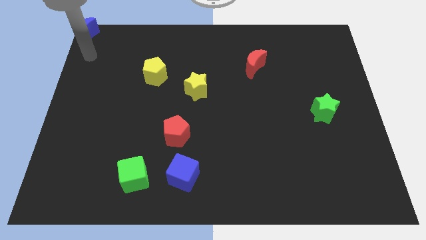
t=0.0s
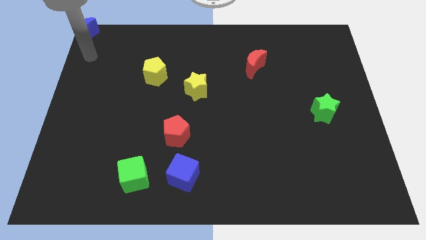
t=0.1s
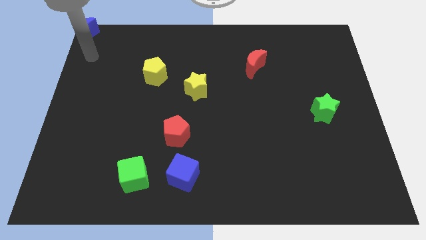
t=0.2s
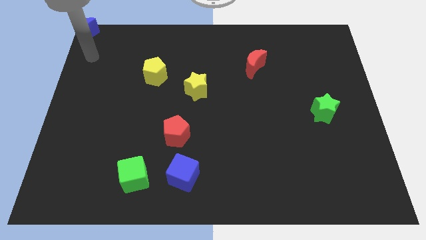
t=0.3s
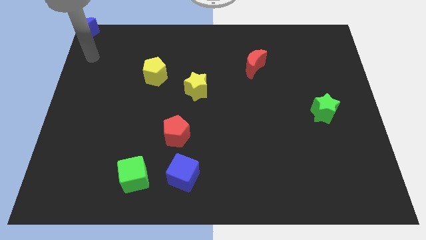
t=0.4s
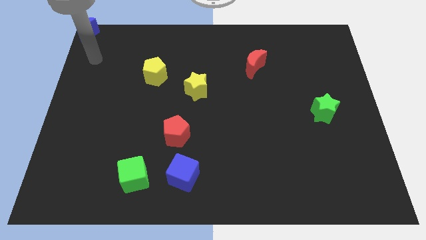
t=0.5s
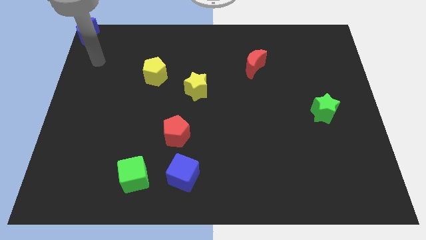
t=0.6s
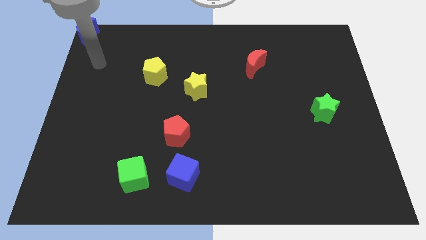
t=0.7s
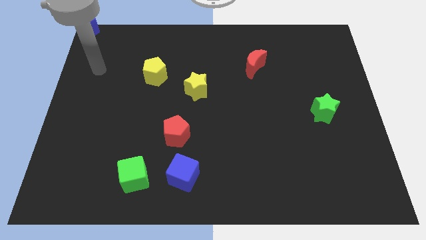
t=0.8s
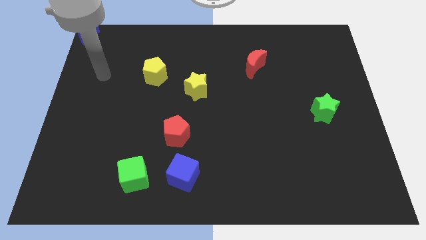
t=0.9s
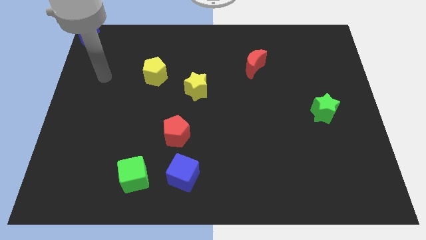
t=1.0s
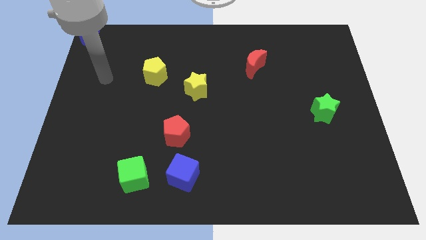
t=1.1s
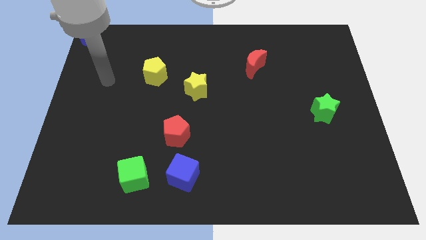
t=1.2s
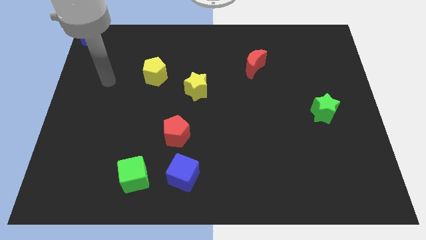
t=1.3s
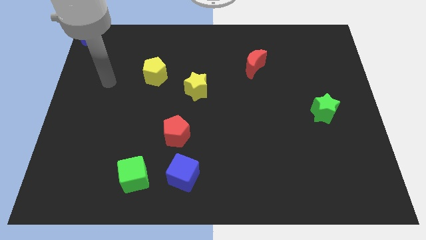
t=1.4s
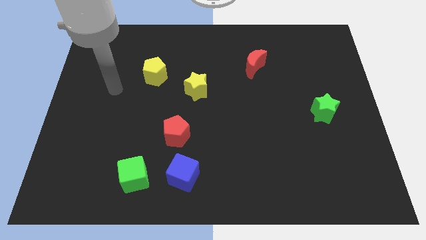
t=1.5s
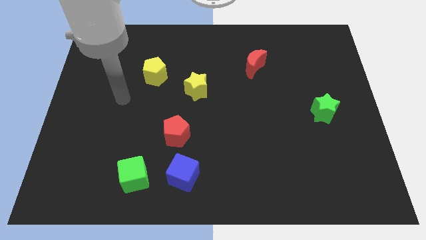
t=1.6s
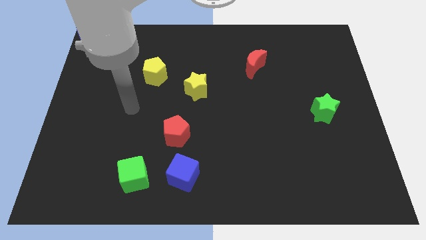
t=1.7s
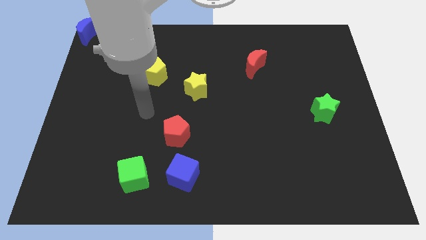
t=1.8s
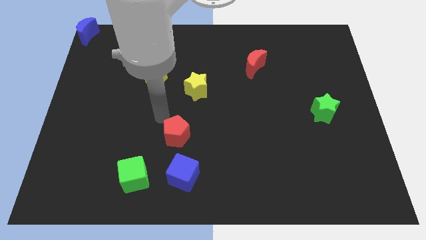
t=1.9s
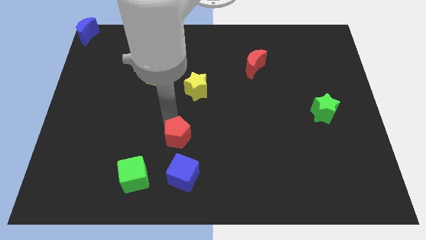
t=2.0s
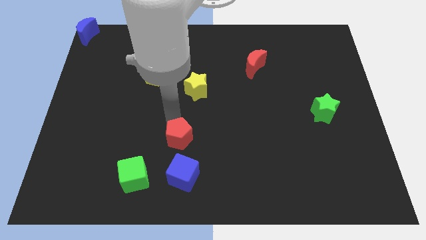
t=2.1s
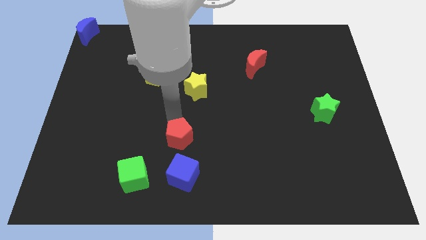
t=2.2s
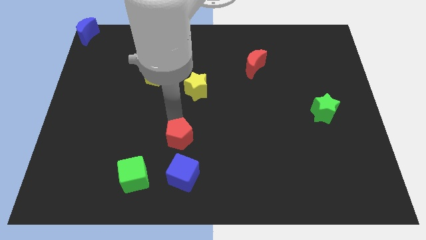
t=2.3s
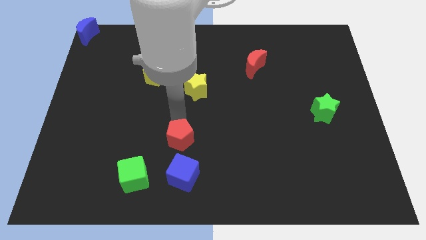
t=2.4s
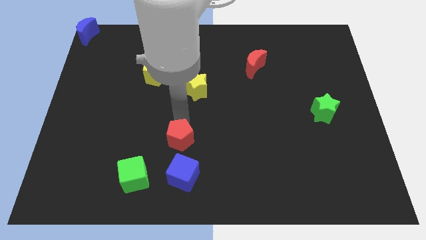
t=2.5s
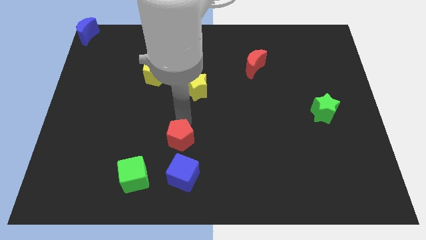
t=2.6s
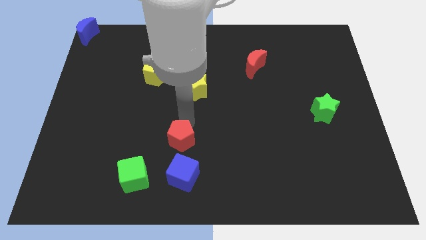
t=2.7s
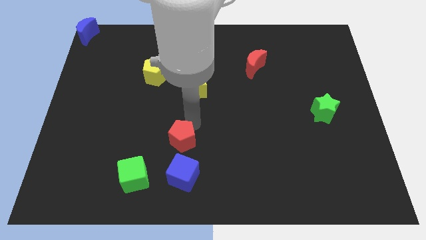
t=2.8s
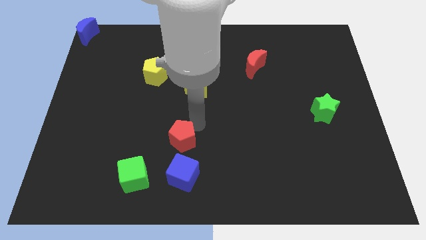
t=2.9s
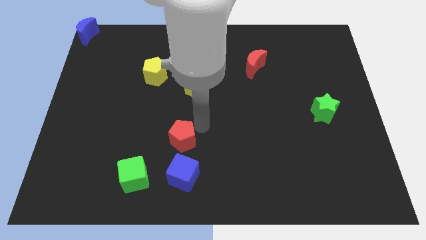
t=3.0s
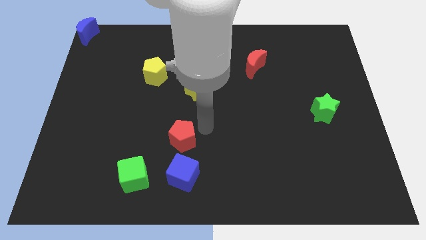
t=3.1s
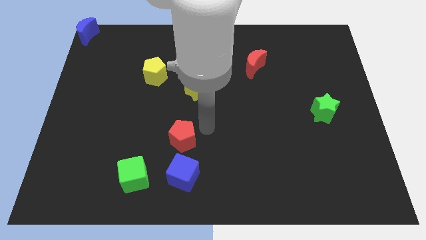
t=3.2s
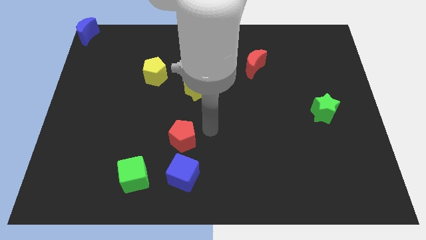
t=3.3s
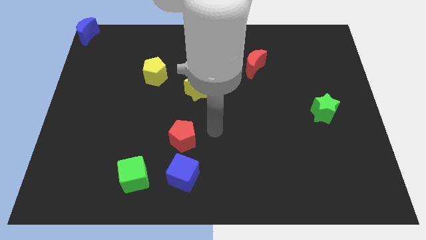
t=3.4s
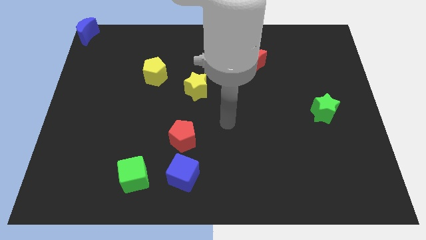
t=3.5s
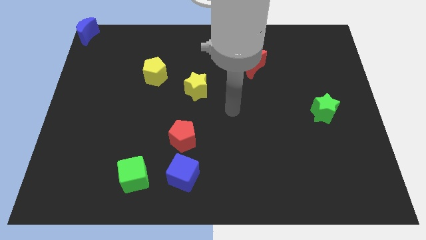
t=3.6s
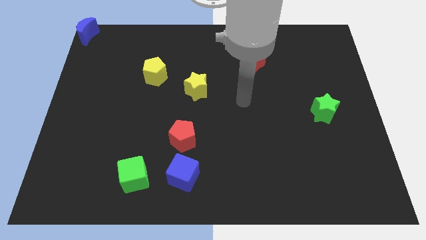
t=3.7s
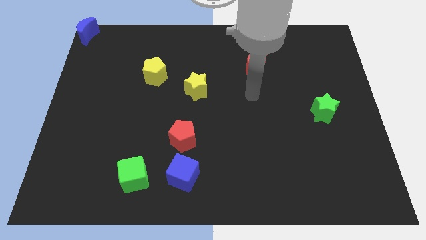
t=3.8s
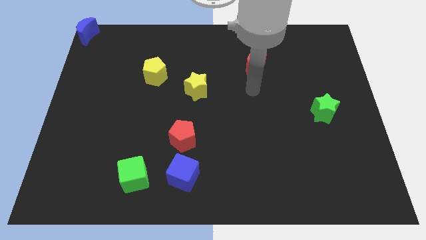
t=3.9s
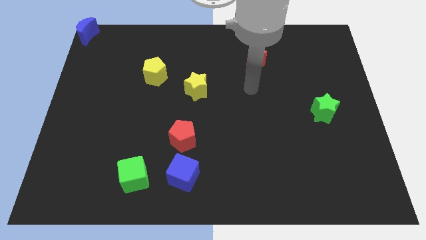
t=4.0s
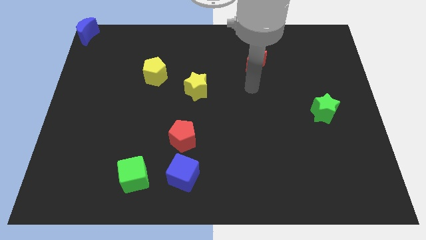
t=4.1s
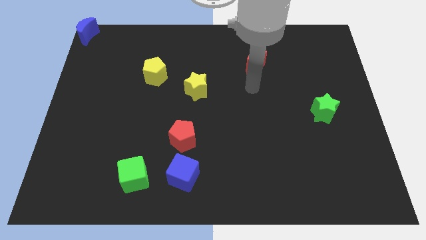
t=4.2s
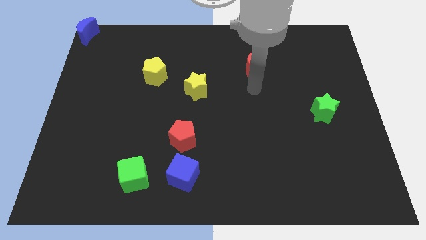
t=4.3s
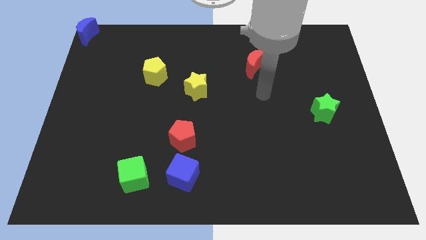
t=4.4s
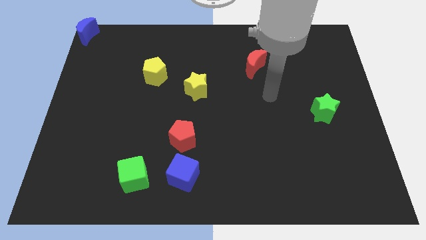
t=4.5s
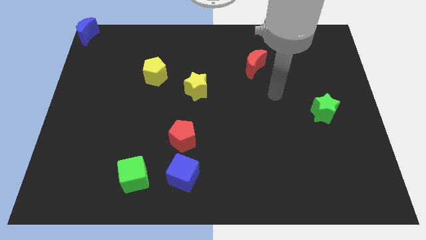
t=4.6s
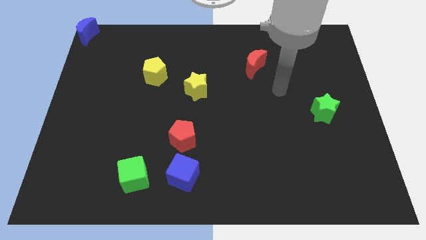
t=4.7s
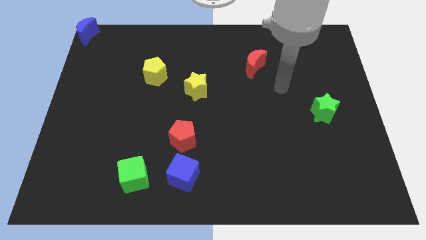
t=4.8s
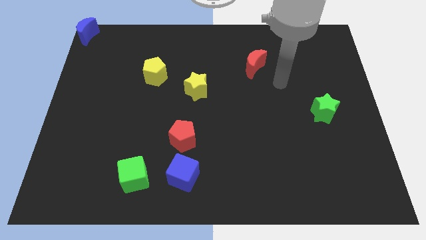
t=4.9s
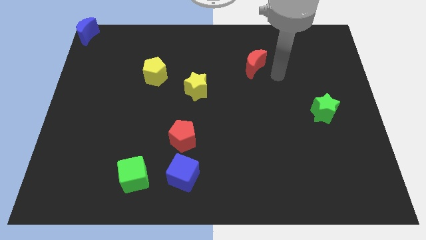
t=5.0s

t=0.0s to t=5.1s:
place your hand diagonally bottom right to the red moon

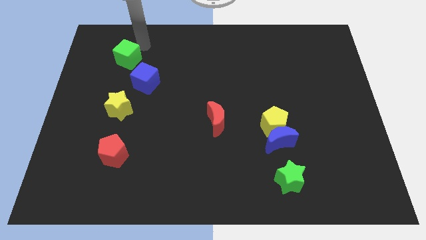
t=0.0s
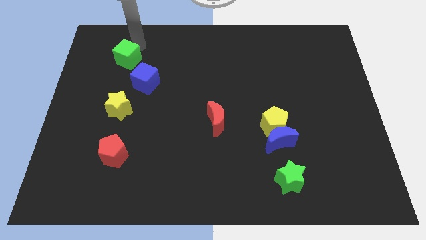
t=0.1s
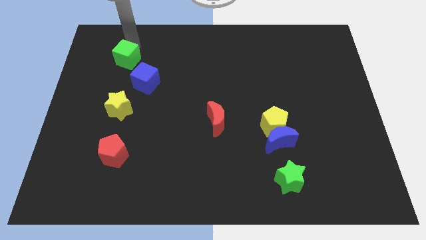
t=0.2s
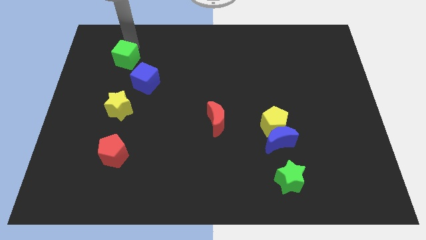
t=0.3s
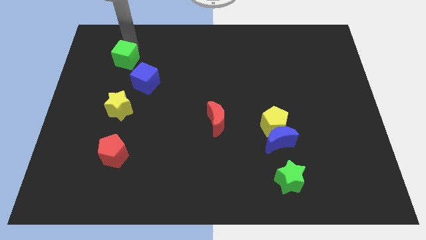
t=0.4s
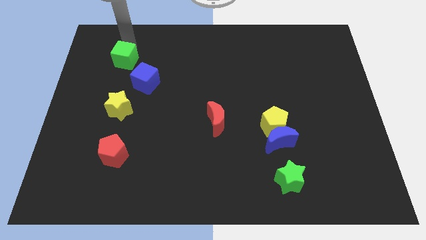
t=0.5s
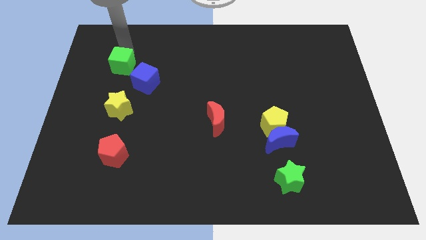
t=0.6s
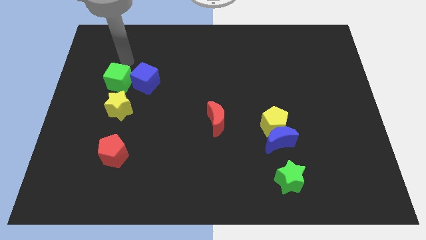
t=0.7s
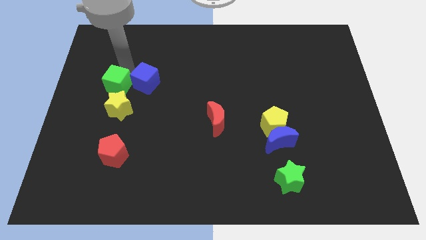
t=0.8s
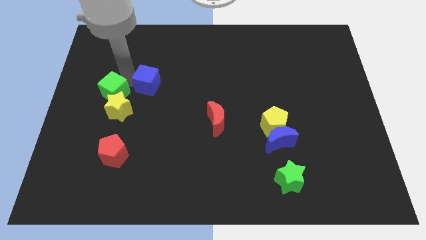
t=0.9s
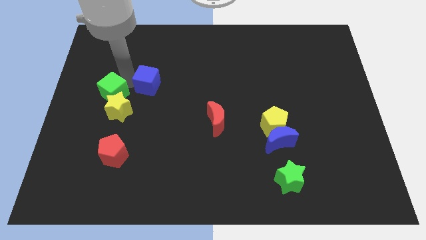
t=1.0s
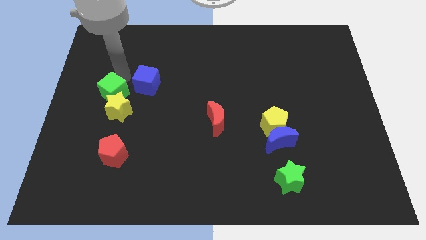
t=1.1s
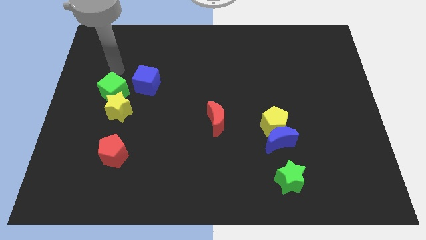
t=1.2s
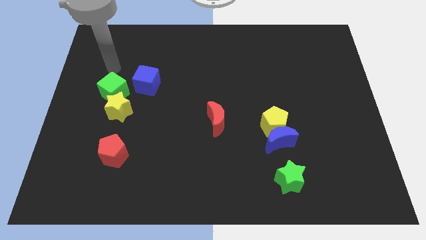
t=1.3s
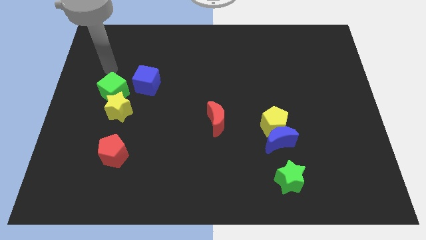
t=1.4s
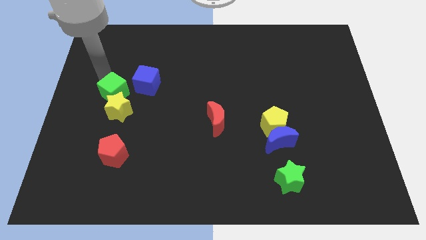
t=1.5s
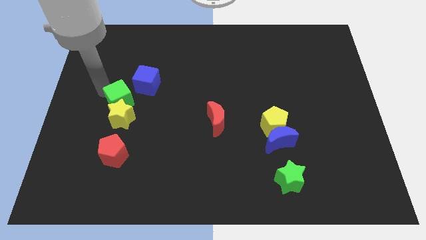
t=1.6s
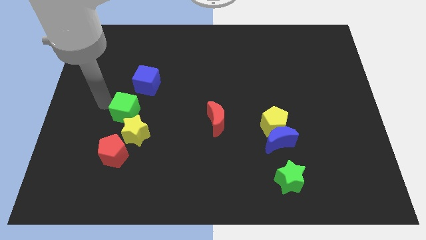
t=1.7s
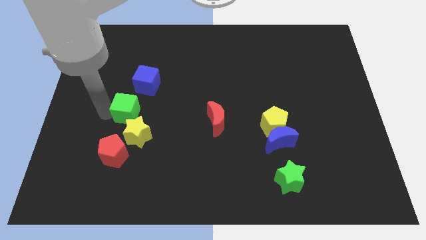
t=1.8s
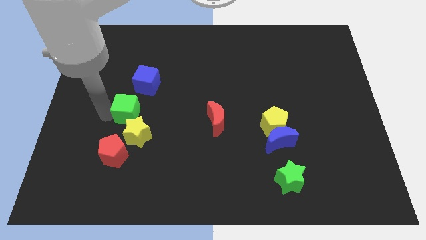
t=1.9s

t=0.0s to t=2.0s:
move the green cube into the yellow star

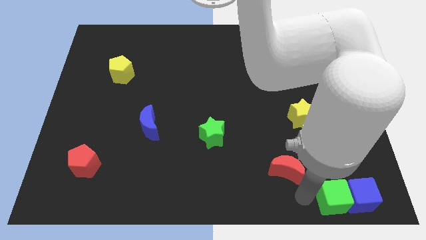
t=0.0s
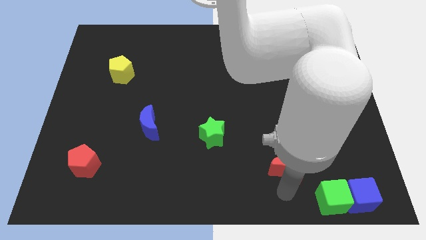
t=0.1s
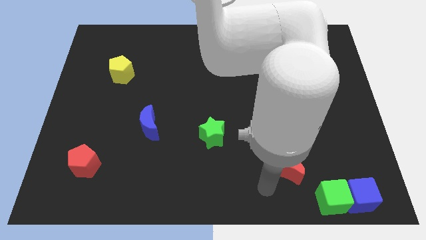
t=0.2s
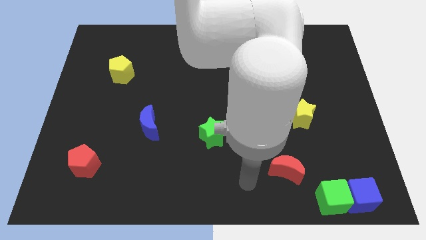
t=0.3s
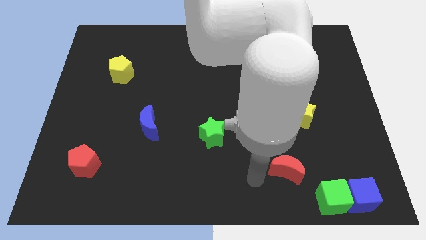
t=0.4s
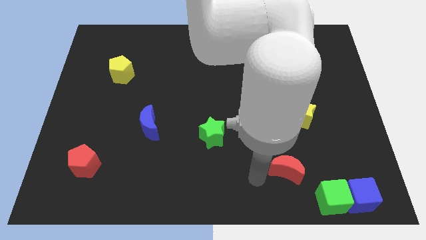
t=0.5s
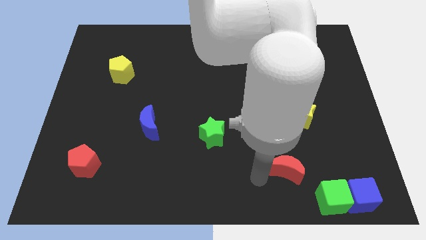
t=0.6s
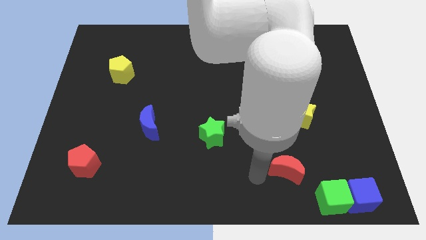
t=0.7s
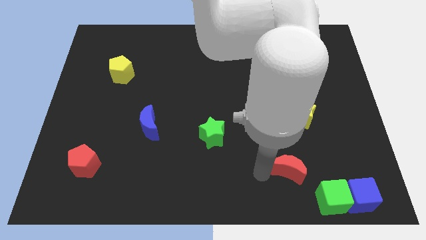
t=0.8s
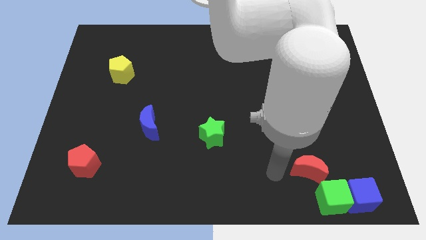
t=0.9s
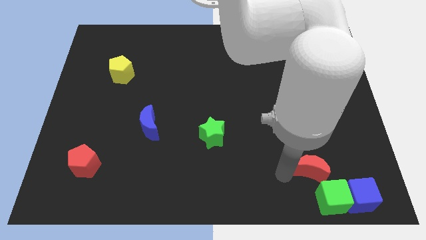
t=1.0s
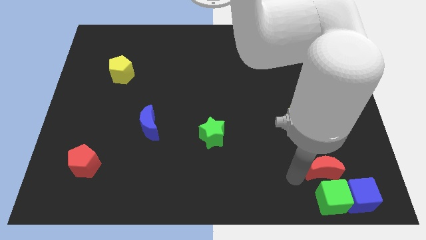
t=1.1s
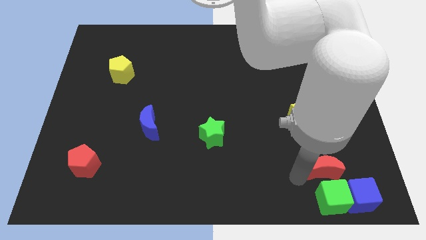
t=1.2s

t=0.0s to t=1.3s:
move the red crescent to the top of the green cube

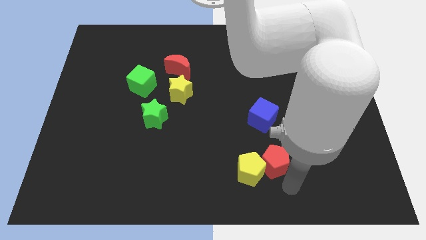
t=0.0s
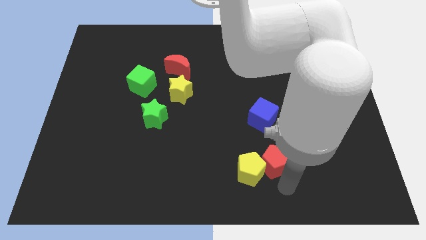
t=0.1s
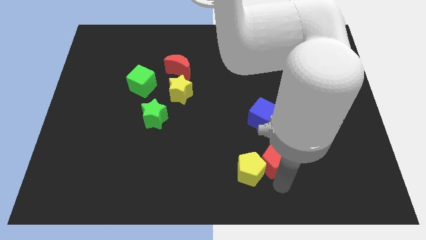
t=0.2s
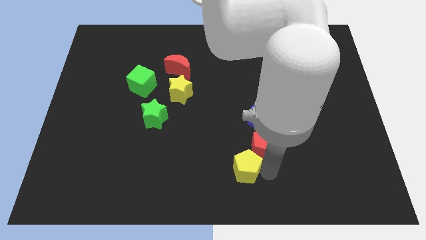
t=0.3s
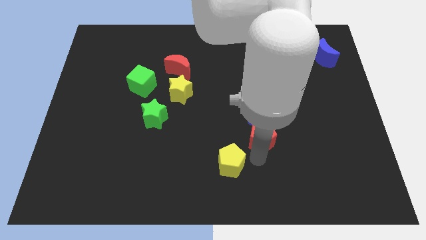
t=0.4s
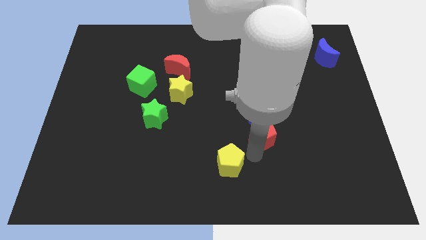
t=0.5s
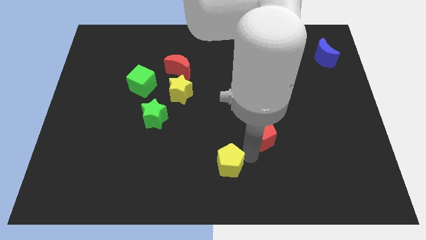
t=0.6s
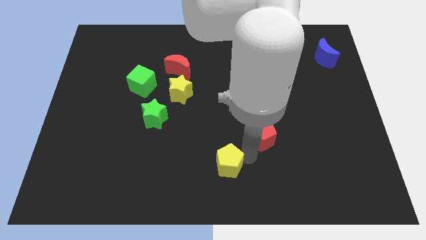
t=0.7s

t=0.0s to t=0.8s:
point your arm between yellow pentagon and red pentagon
